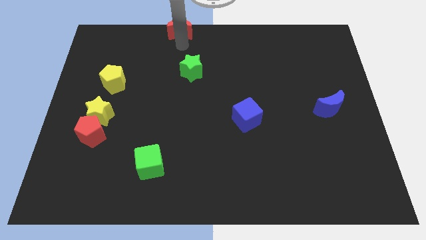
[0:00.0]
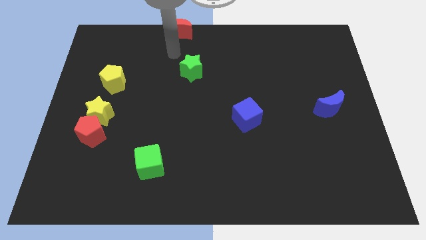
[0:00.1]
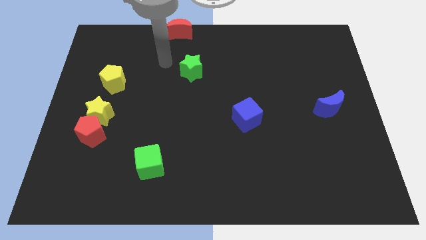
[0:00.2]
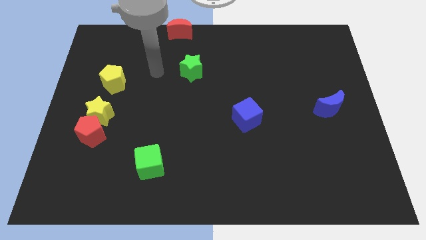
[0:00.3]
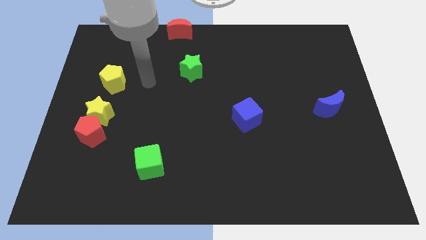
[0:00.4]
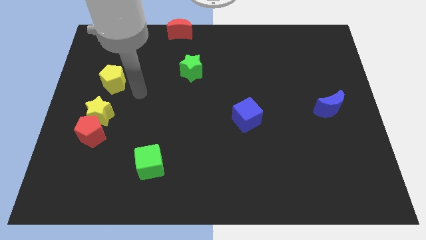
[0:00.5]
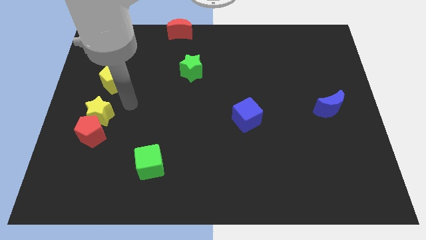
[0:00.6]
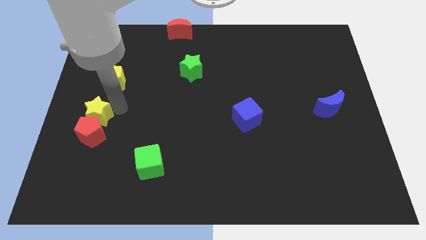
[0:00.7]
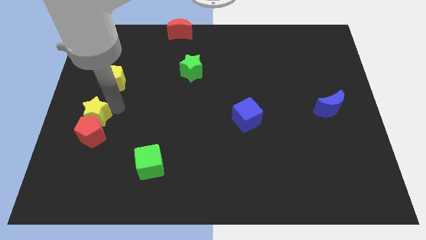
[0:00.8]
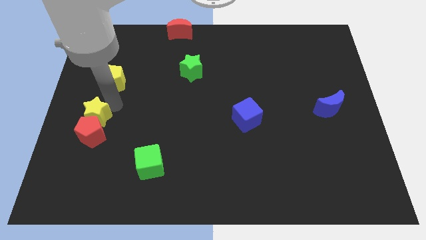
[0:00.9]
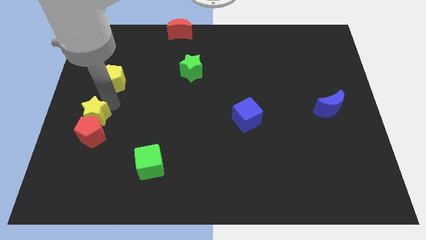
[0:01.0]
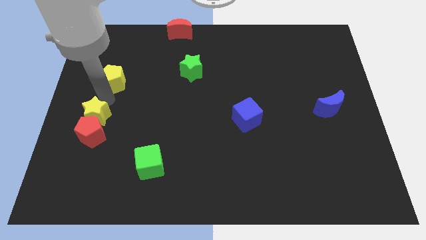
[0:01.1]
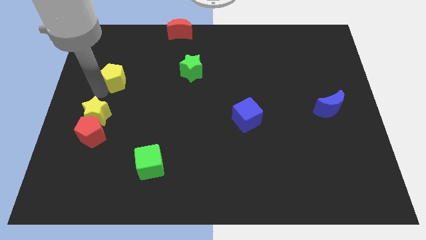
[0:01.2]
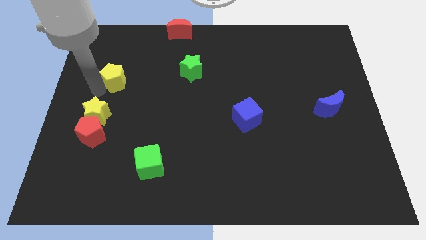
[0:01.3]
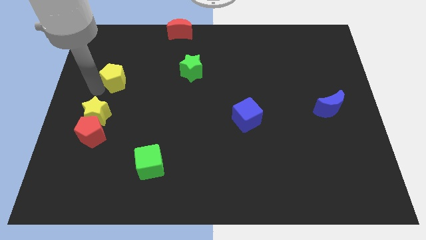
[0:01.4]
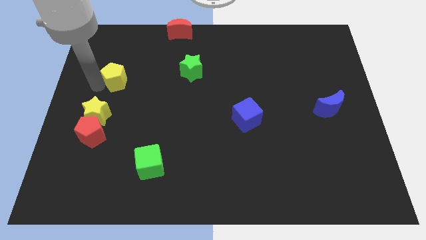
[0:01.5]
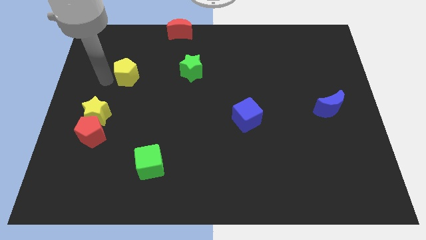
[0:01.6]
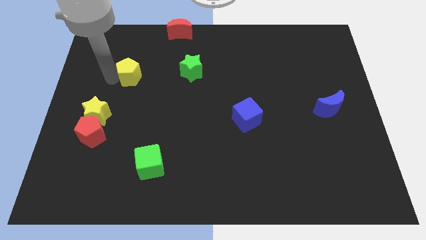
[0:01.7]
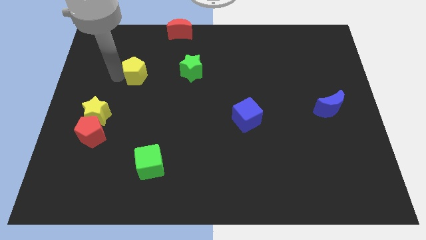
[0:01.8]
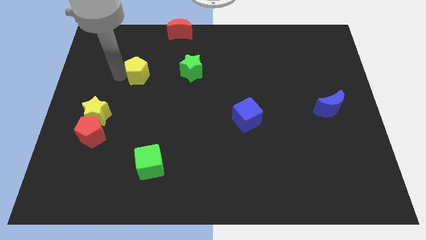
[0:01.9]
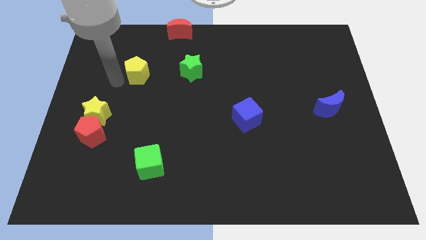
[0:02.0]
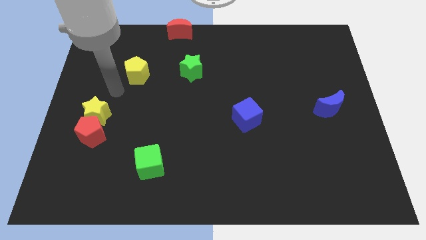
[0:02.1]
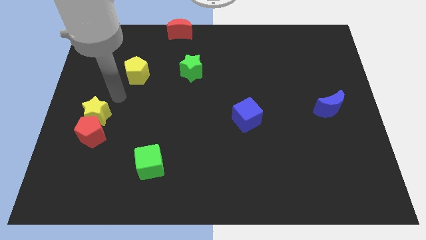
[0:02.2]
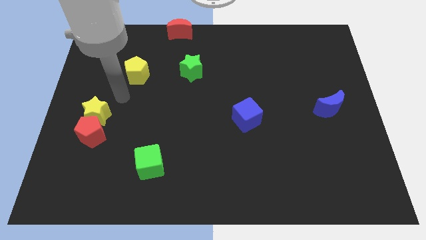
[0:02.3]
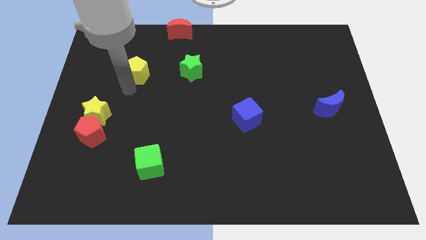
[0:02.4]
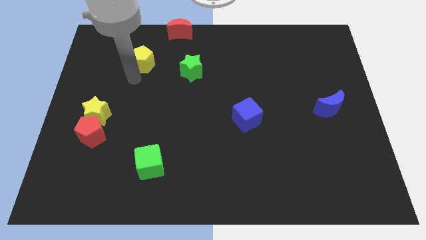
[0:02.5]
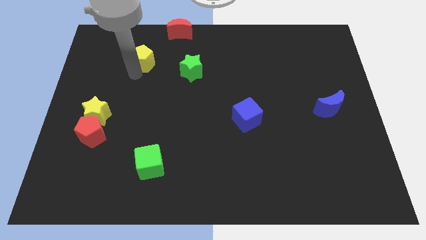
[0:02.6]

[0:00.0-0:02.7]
push the yellow pentagon slightly towards up

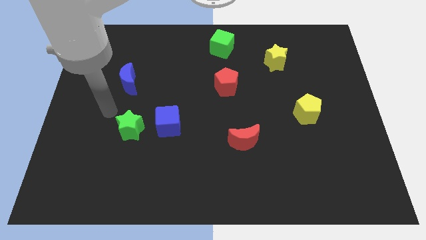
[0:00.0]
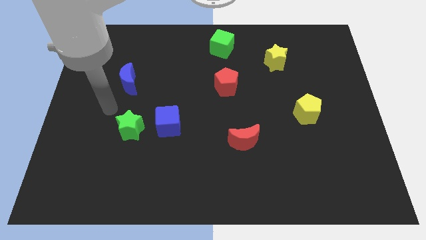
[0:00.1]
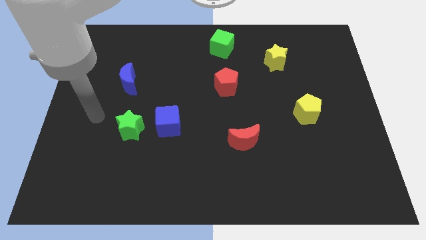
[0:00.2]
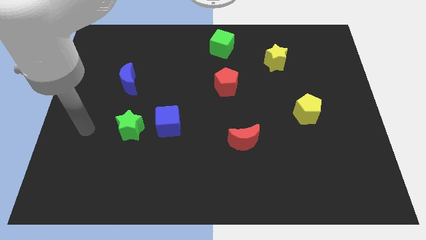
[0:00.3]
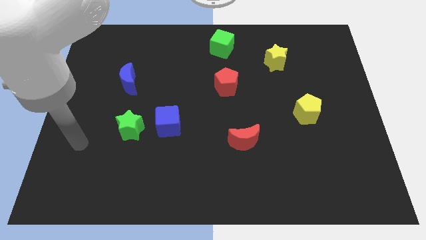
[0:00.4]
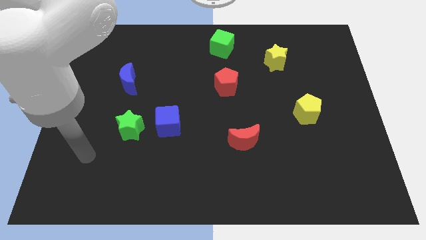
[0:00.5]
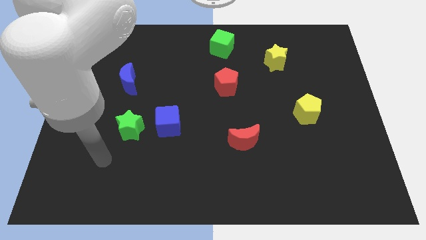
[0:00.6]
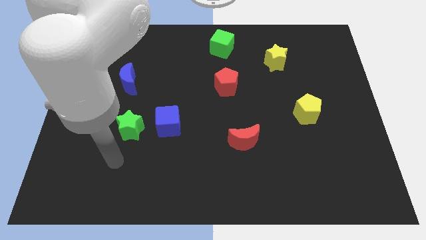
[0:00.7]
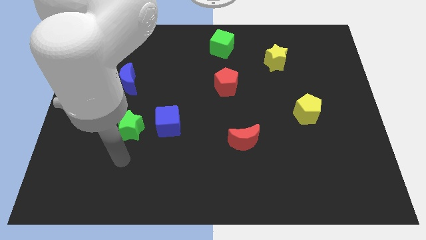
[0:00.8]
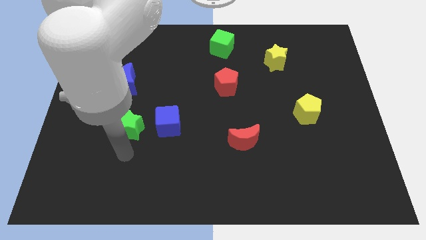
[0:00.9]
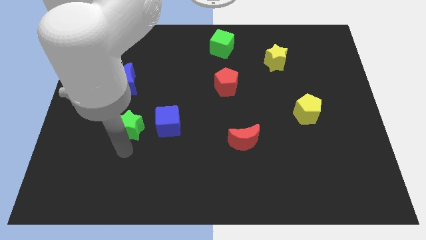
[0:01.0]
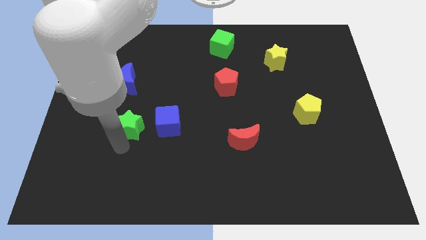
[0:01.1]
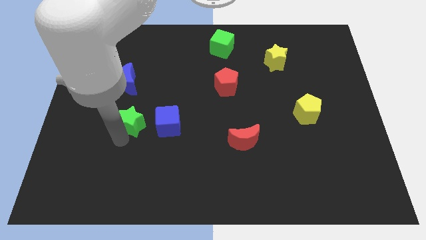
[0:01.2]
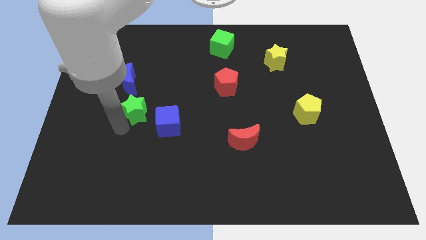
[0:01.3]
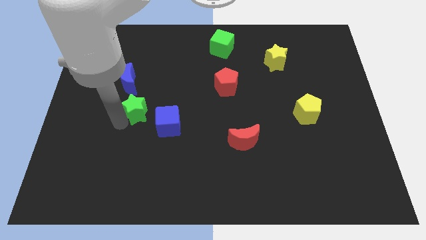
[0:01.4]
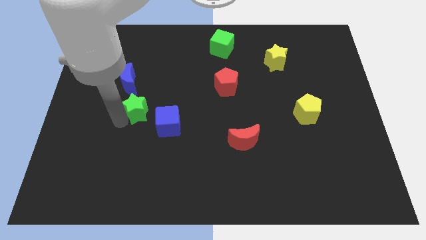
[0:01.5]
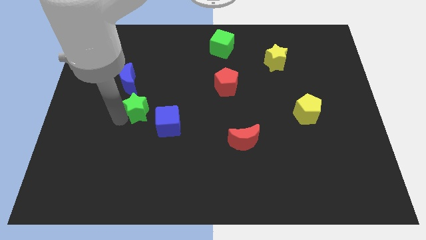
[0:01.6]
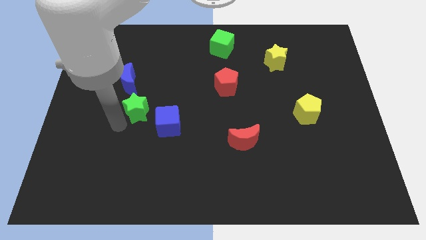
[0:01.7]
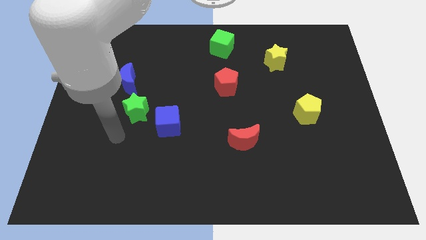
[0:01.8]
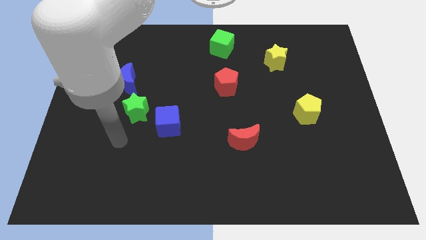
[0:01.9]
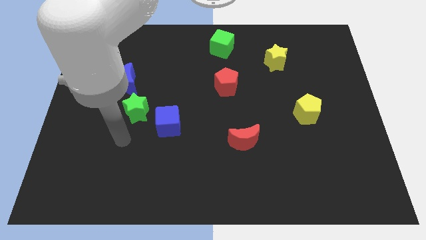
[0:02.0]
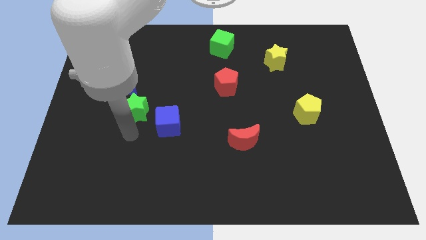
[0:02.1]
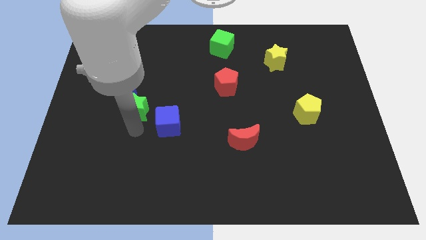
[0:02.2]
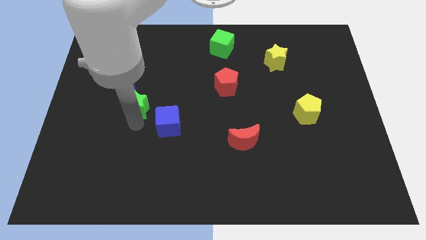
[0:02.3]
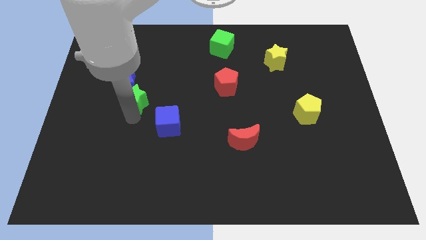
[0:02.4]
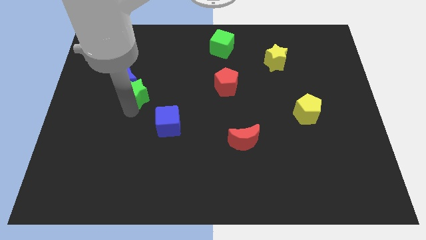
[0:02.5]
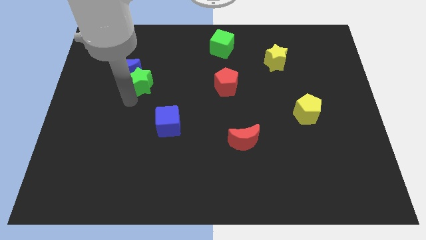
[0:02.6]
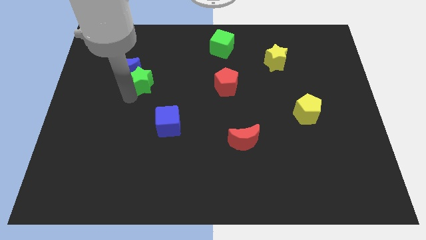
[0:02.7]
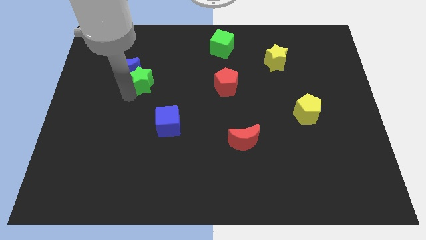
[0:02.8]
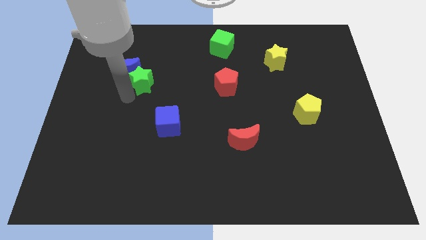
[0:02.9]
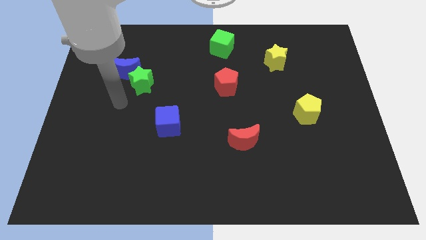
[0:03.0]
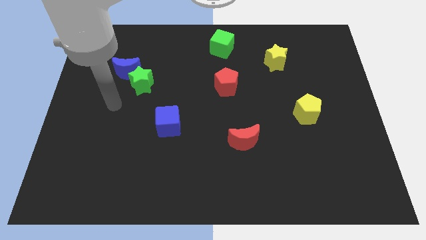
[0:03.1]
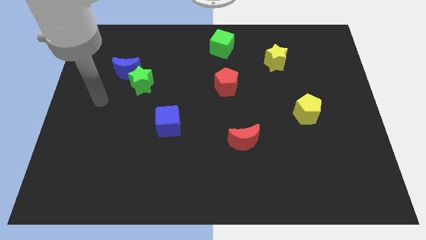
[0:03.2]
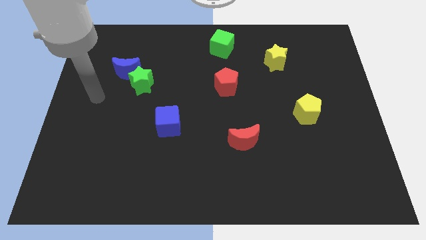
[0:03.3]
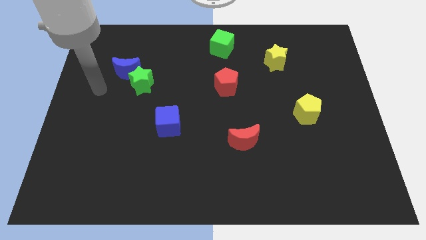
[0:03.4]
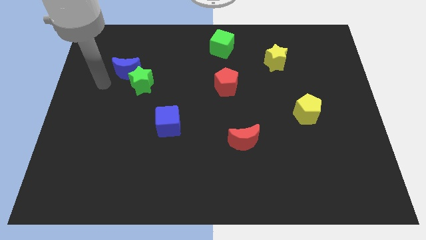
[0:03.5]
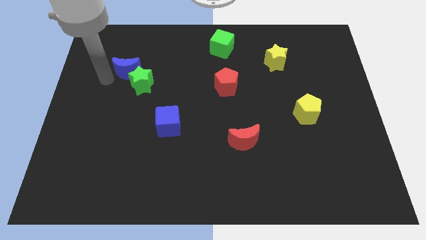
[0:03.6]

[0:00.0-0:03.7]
place the arm left to the blue moon

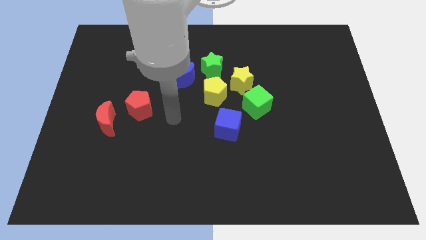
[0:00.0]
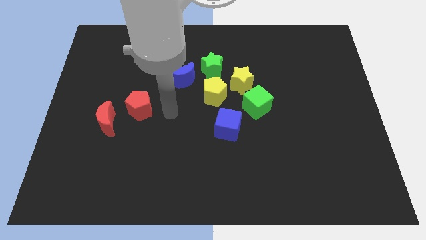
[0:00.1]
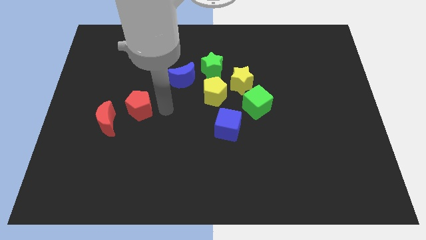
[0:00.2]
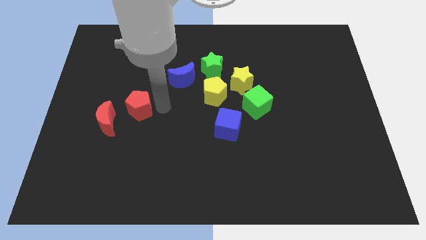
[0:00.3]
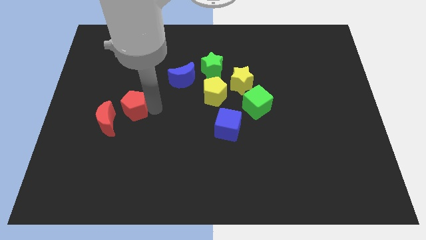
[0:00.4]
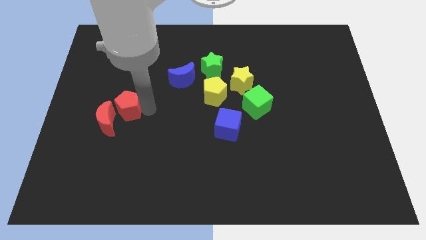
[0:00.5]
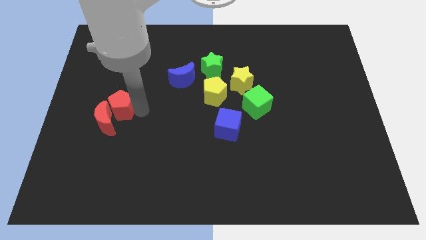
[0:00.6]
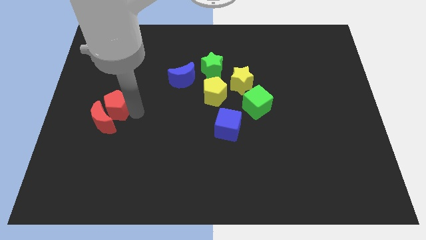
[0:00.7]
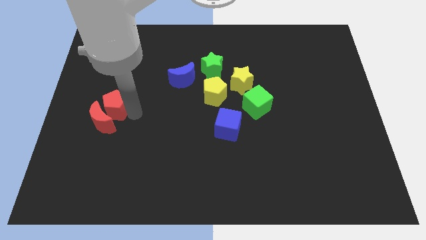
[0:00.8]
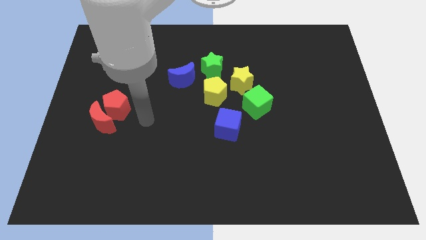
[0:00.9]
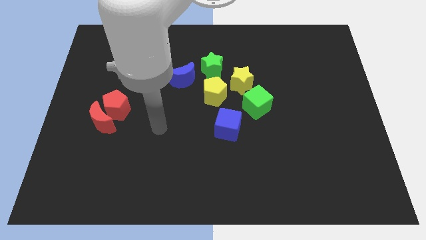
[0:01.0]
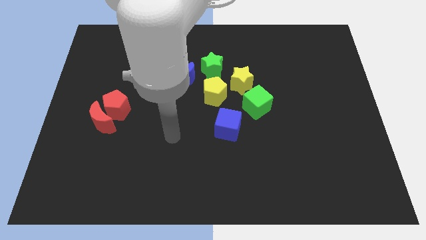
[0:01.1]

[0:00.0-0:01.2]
move red pentagon into red moon

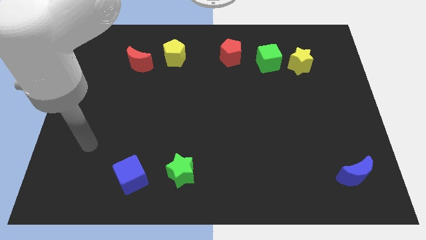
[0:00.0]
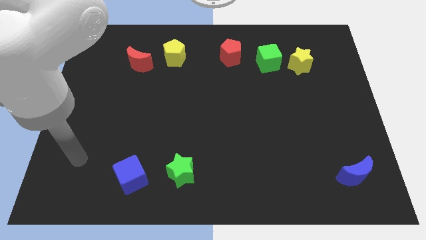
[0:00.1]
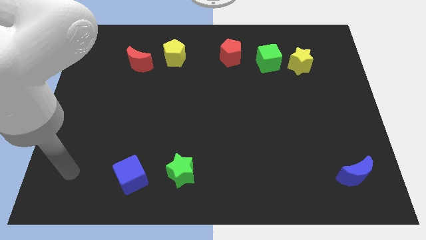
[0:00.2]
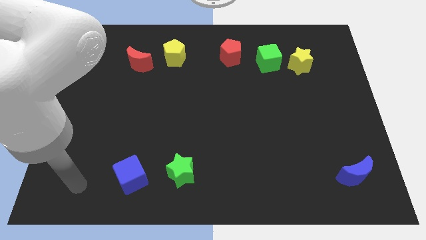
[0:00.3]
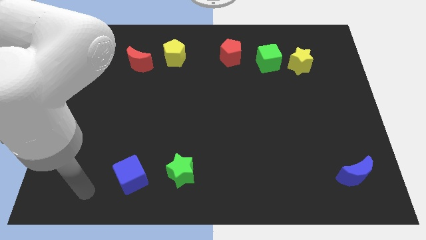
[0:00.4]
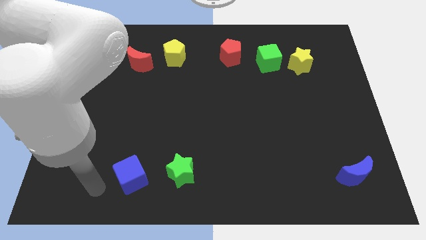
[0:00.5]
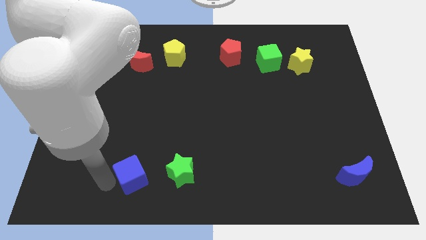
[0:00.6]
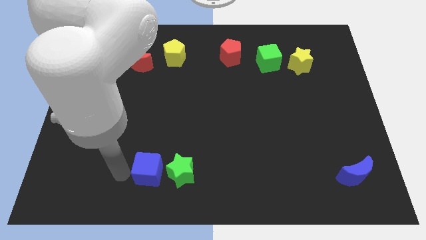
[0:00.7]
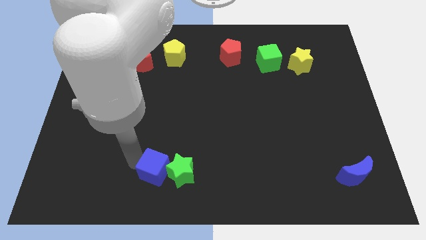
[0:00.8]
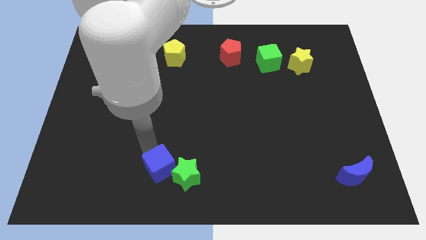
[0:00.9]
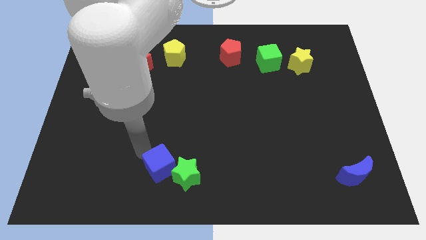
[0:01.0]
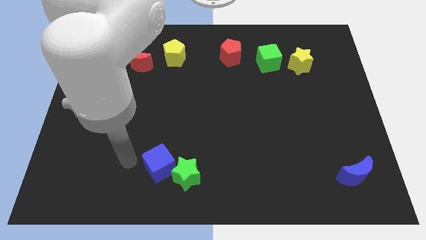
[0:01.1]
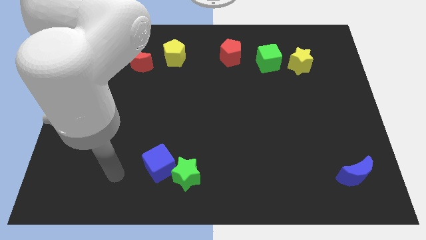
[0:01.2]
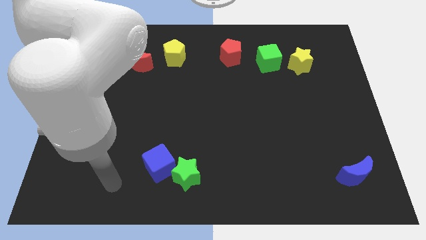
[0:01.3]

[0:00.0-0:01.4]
move the blue cube into the green star
